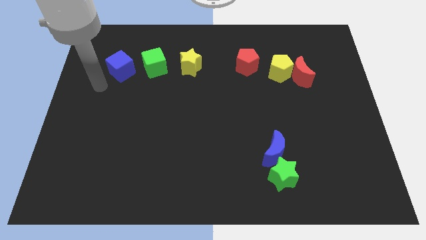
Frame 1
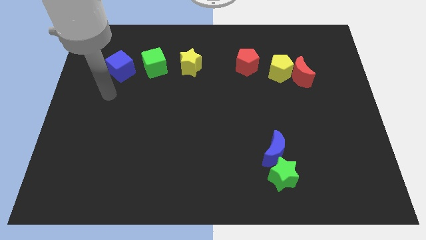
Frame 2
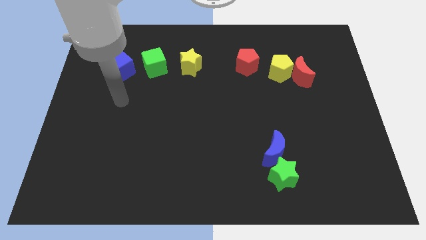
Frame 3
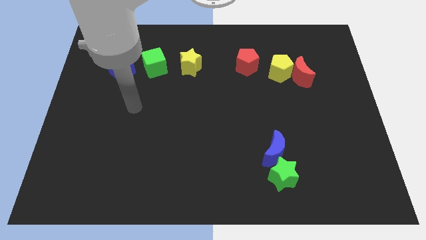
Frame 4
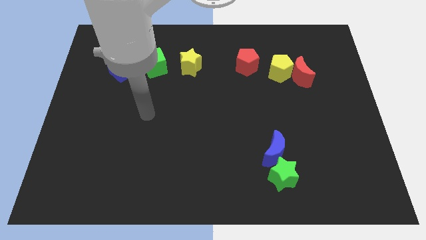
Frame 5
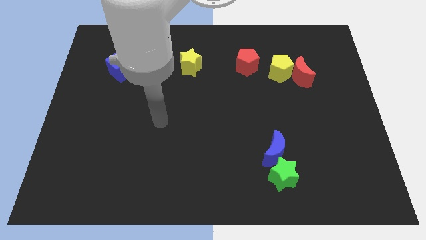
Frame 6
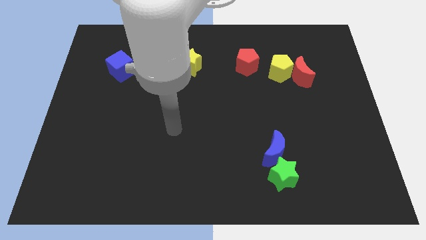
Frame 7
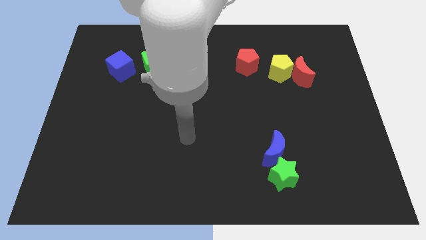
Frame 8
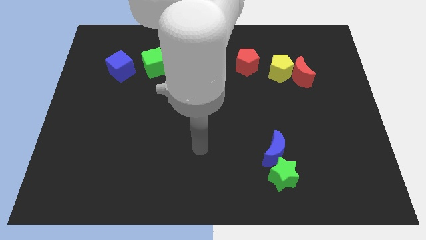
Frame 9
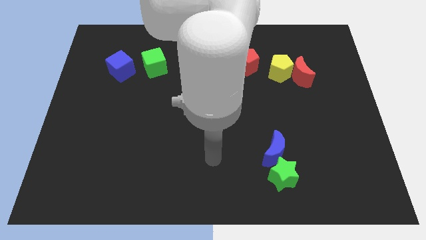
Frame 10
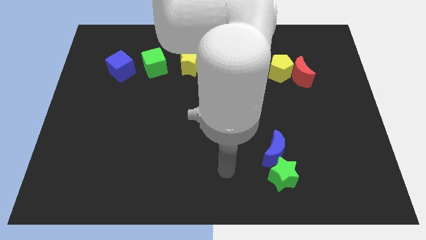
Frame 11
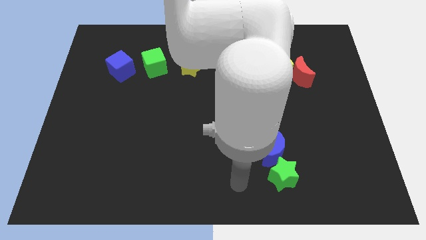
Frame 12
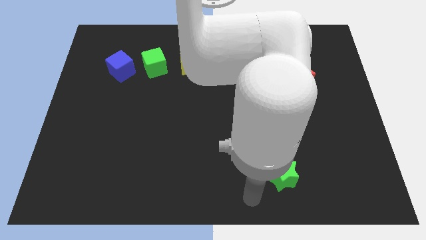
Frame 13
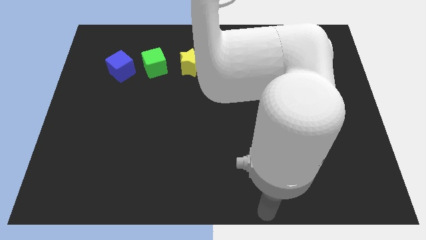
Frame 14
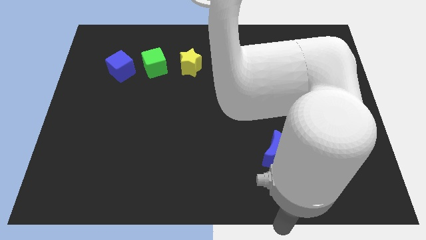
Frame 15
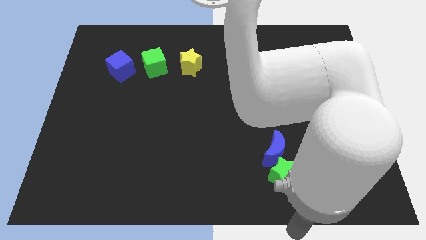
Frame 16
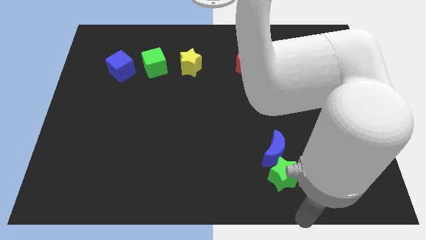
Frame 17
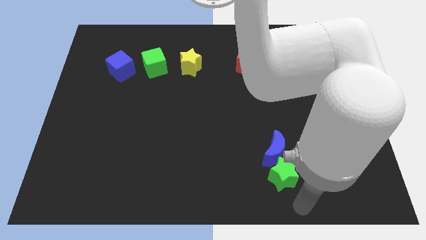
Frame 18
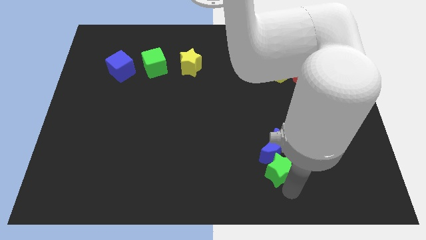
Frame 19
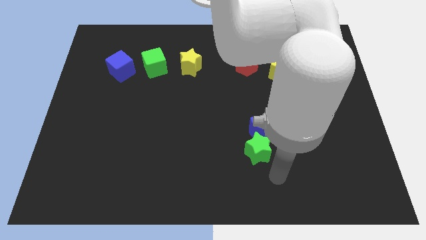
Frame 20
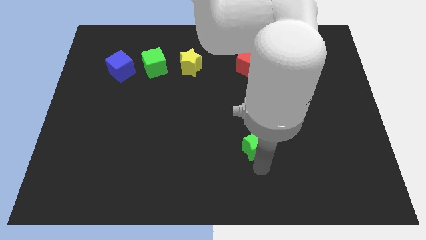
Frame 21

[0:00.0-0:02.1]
slightly drag the green star towards the blue crescent

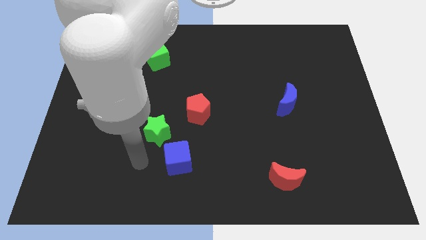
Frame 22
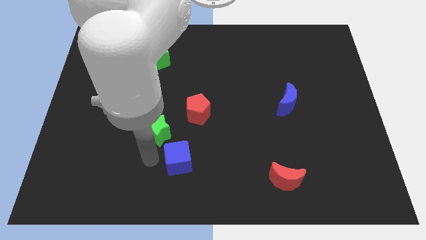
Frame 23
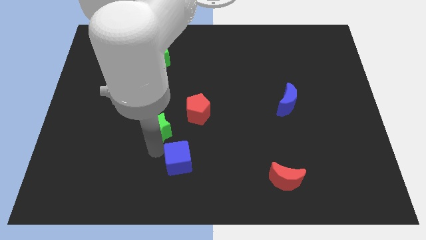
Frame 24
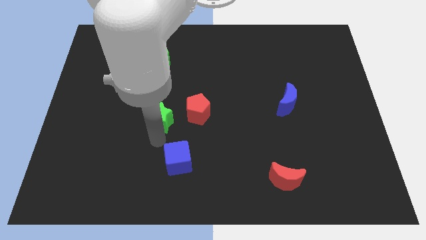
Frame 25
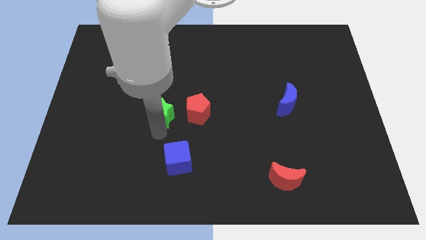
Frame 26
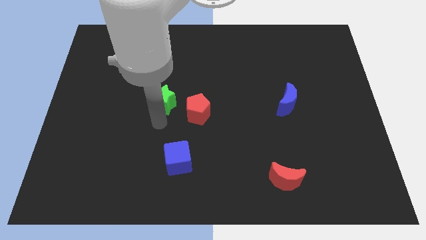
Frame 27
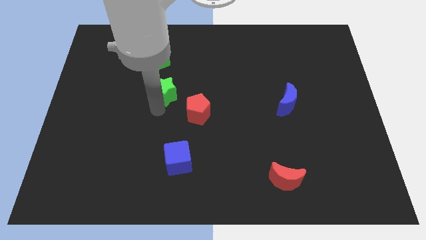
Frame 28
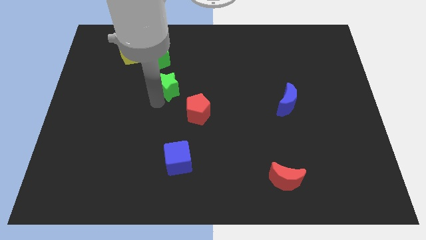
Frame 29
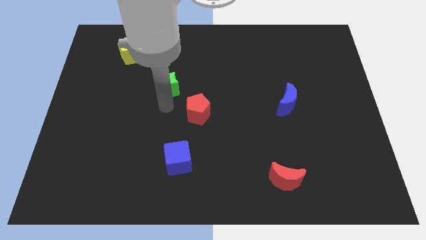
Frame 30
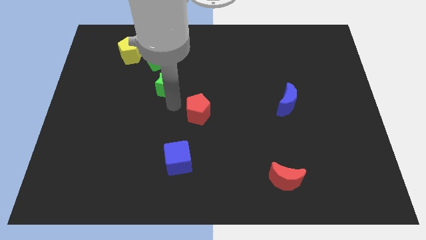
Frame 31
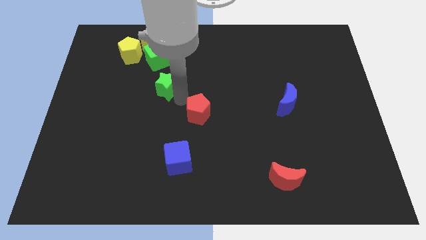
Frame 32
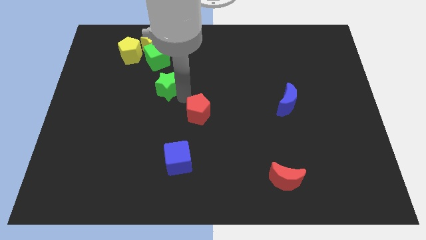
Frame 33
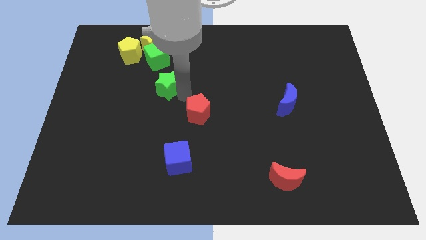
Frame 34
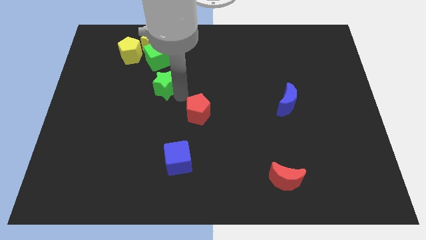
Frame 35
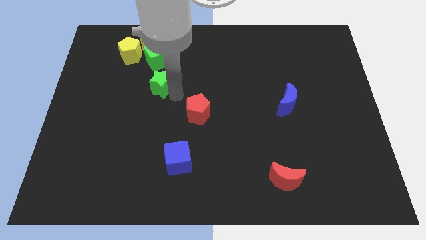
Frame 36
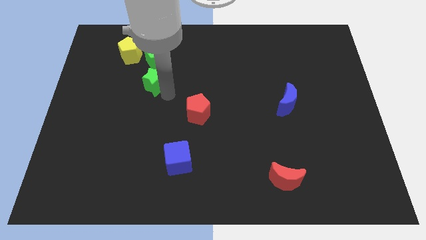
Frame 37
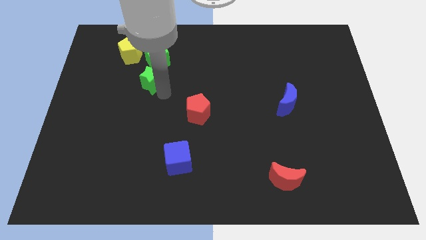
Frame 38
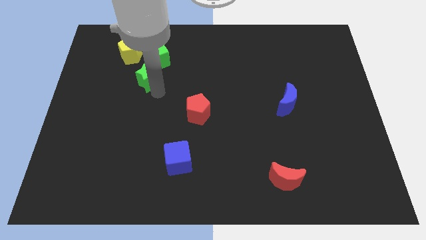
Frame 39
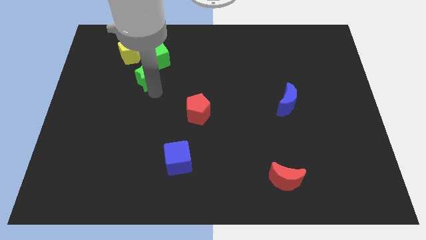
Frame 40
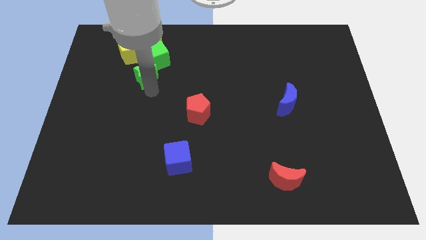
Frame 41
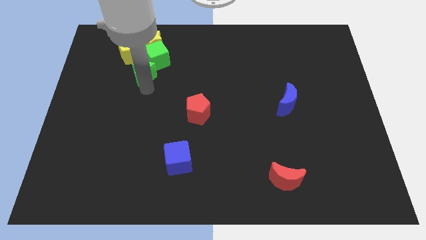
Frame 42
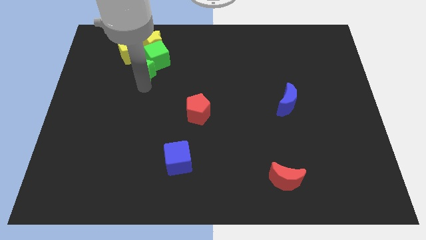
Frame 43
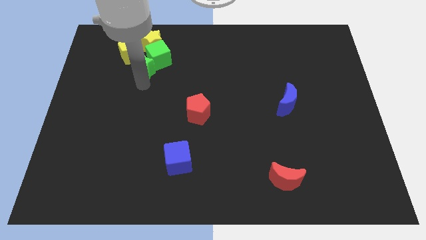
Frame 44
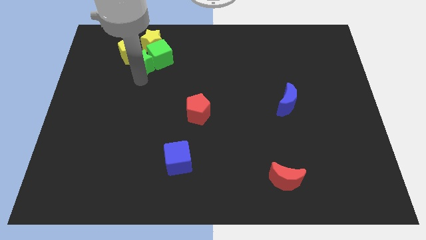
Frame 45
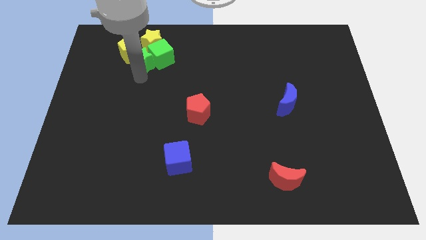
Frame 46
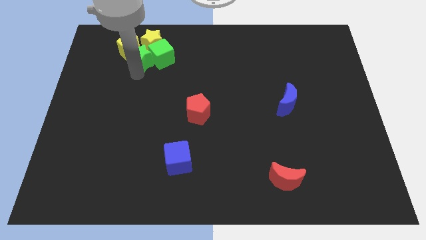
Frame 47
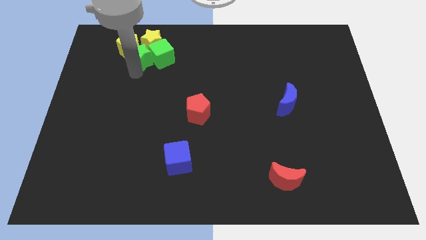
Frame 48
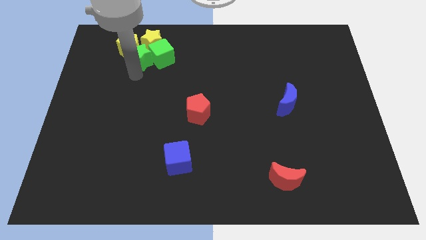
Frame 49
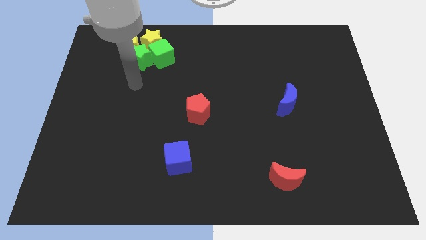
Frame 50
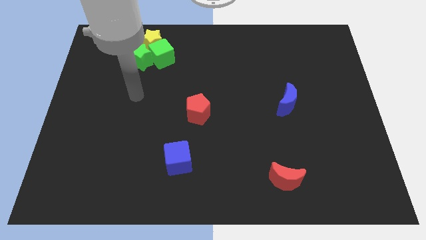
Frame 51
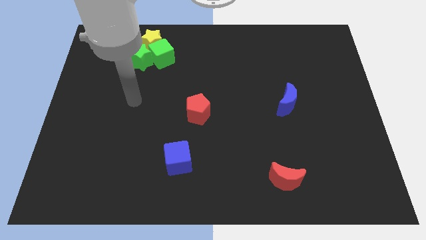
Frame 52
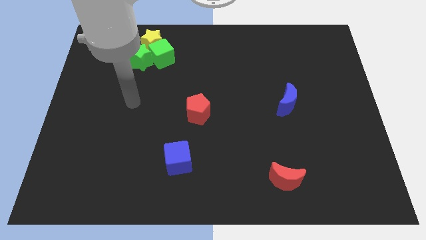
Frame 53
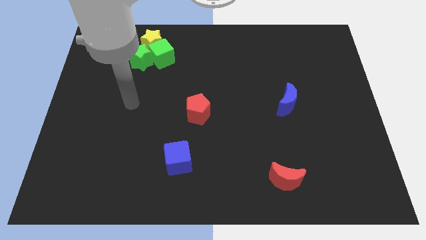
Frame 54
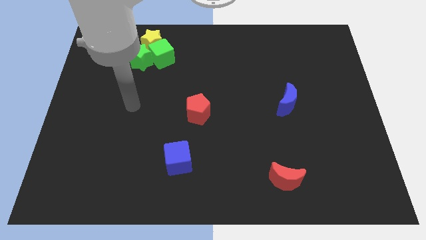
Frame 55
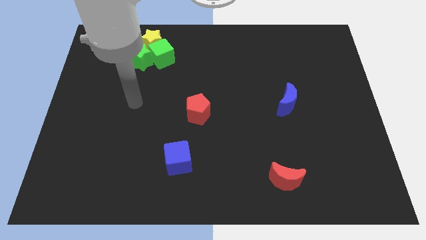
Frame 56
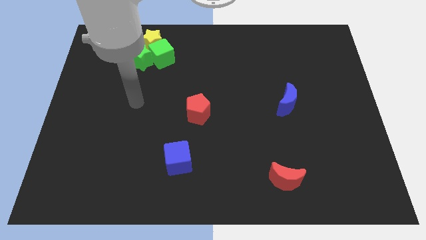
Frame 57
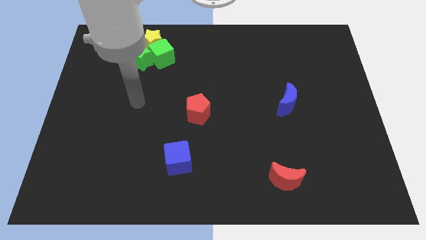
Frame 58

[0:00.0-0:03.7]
move the green star to the left of the green cube

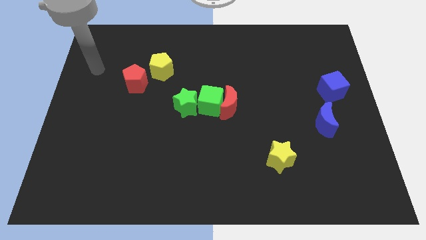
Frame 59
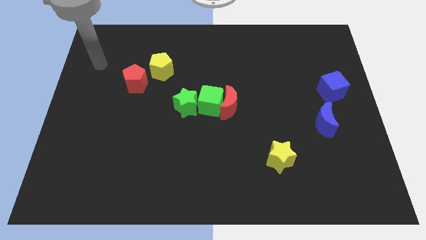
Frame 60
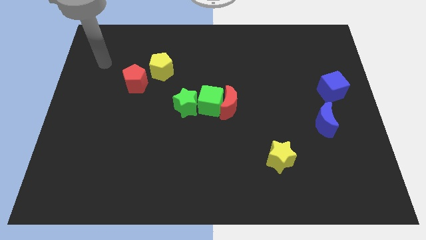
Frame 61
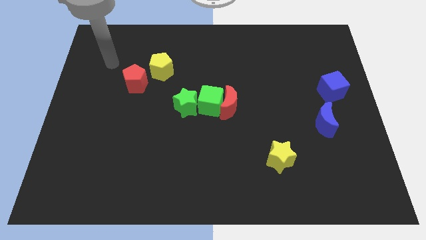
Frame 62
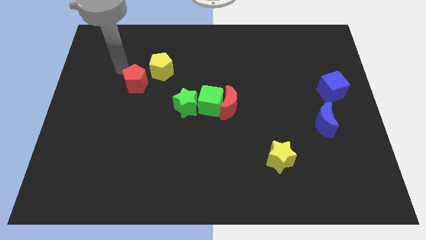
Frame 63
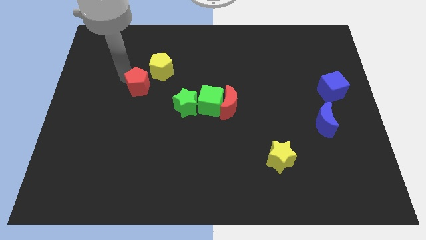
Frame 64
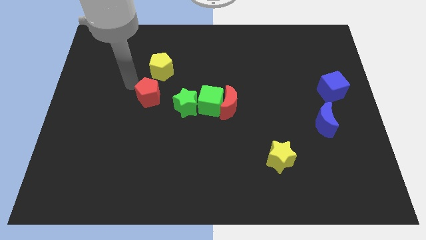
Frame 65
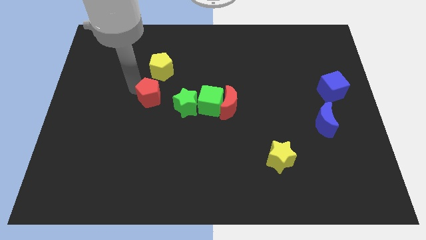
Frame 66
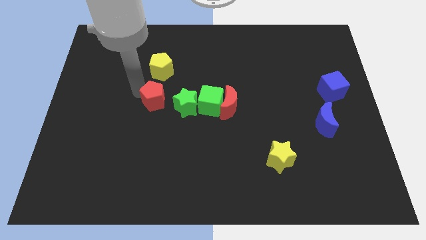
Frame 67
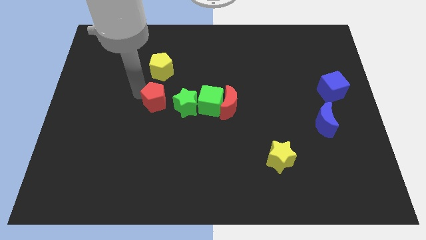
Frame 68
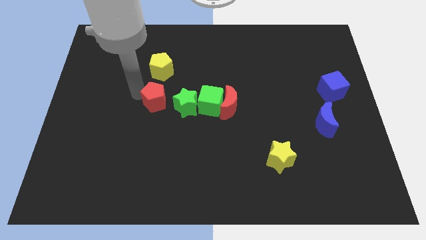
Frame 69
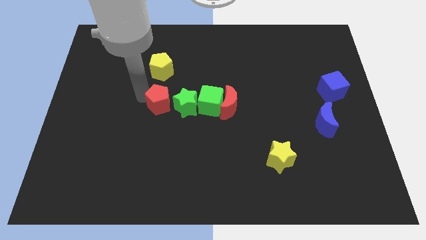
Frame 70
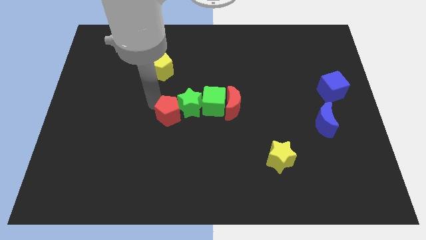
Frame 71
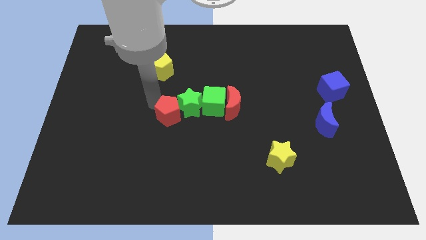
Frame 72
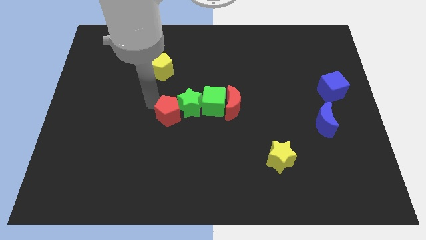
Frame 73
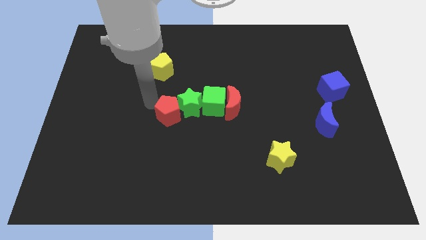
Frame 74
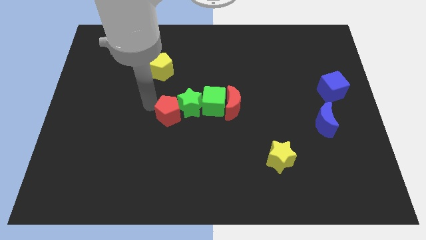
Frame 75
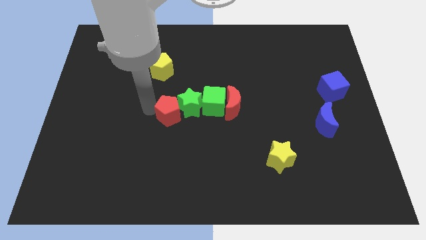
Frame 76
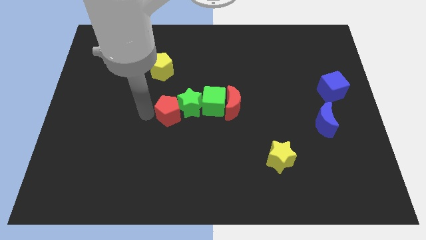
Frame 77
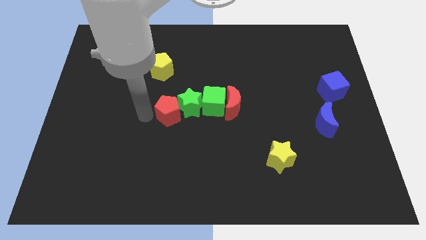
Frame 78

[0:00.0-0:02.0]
push the red pentagon to the left side of the green star

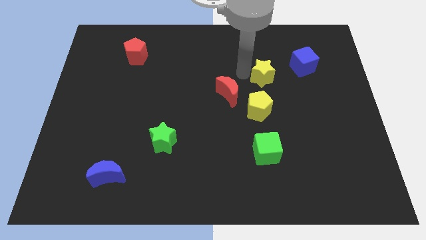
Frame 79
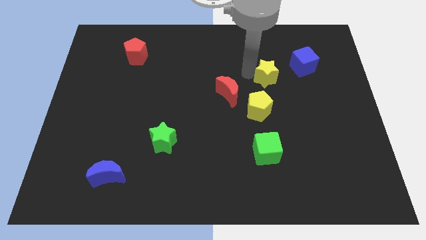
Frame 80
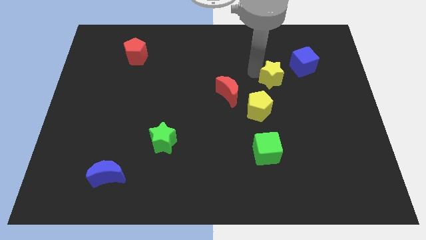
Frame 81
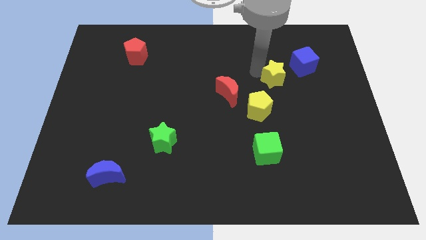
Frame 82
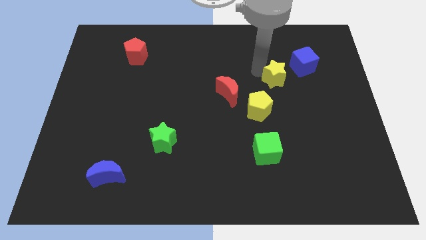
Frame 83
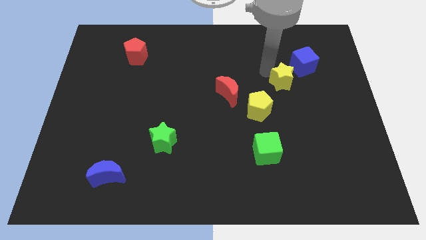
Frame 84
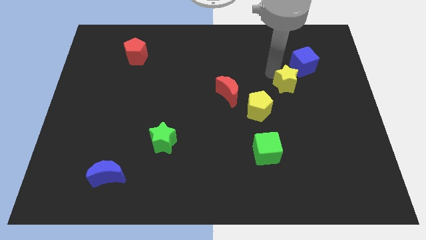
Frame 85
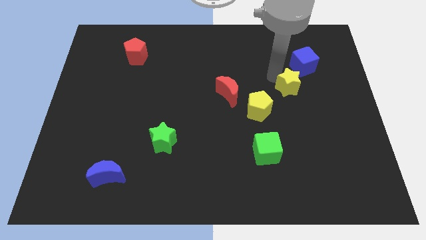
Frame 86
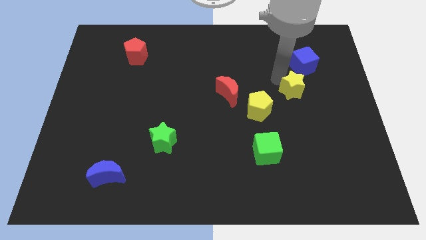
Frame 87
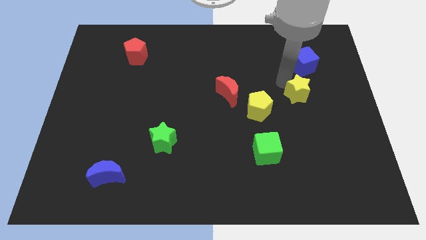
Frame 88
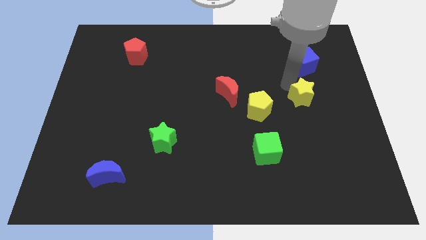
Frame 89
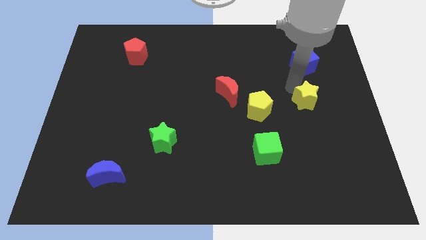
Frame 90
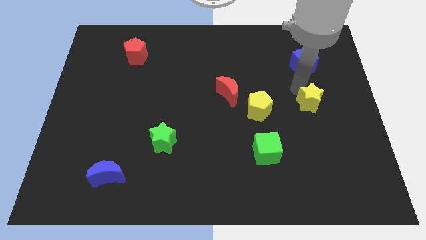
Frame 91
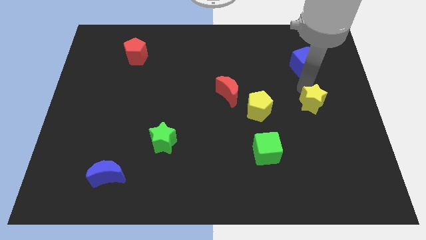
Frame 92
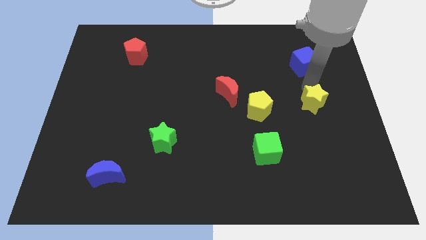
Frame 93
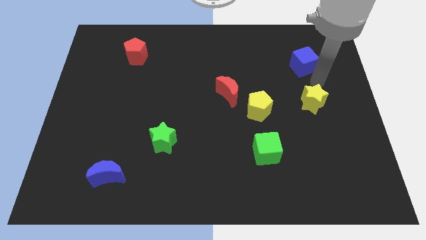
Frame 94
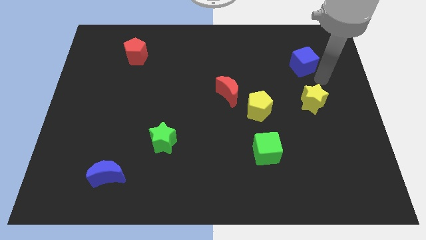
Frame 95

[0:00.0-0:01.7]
move the yellow star to the right of the yellow pentagon
